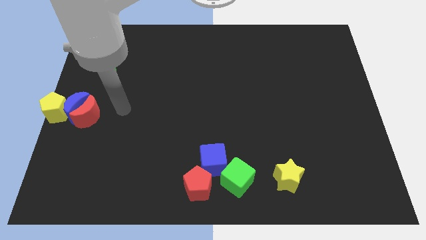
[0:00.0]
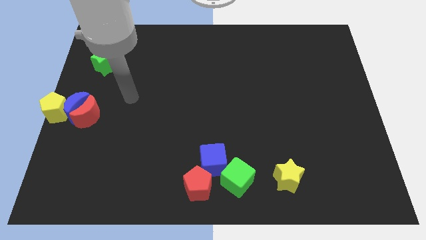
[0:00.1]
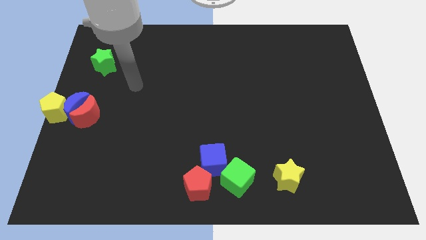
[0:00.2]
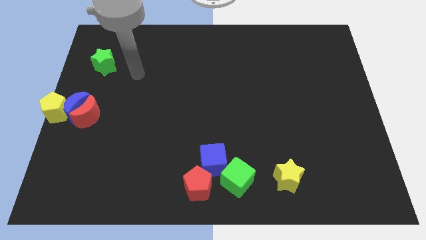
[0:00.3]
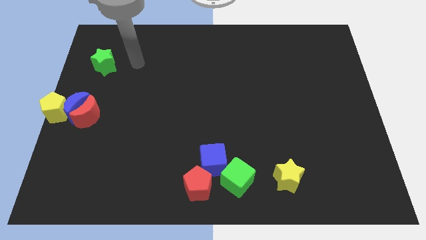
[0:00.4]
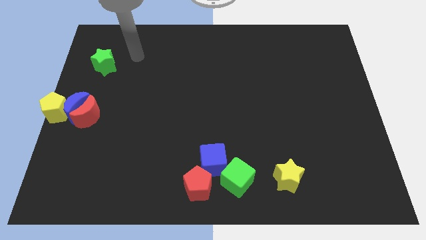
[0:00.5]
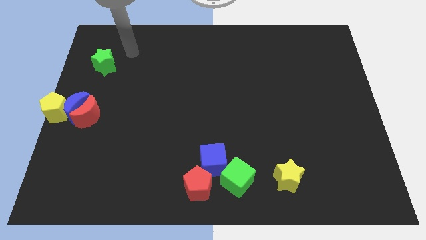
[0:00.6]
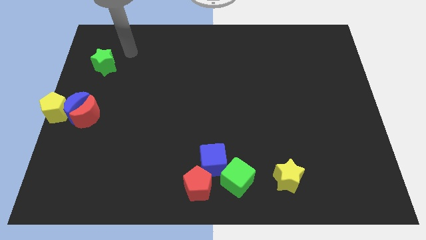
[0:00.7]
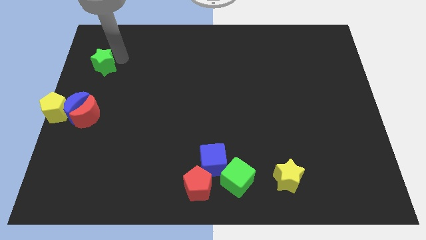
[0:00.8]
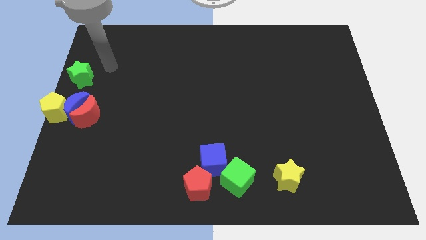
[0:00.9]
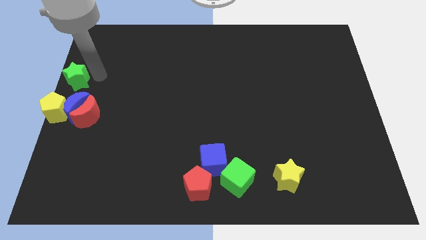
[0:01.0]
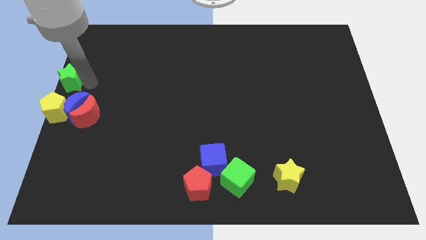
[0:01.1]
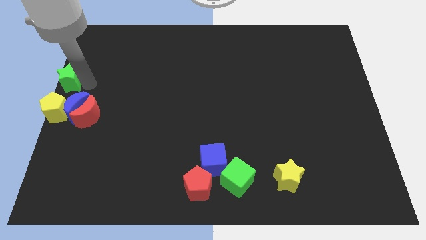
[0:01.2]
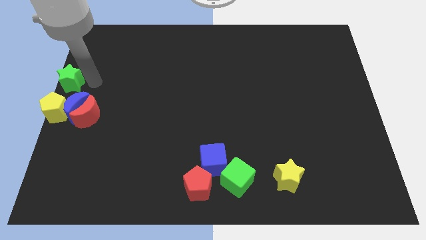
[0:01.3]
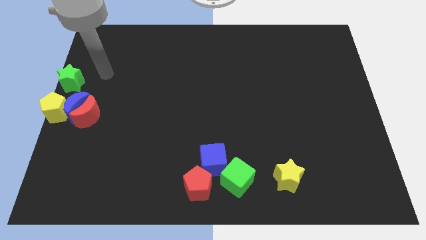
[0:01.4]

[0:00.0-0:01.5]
move the green star towards the left center of the board

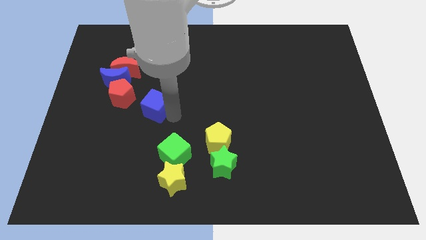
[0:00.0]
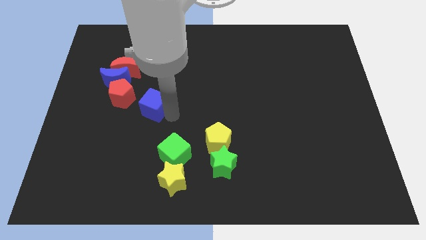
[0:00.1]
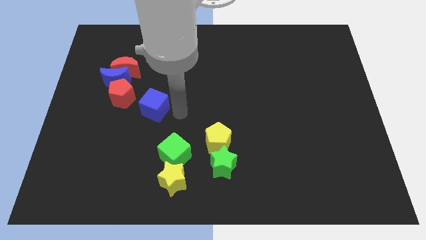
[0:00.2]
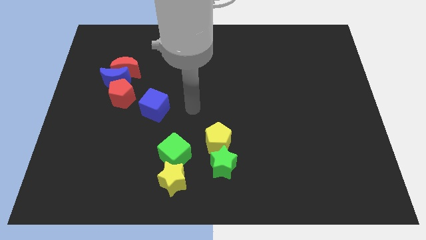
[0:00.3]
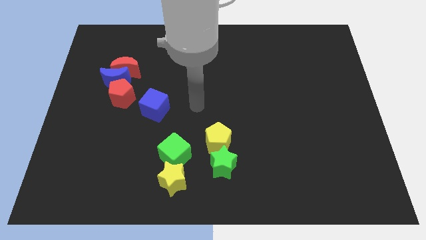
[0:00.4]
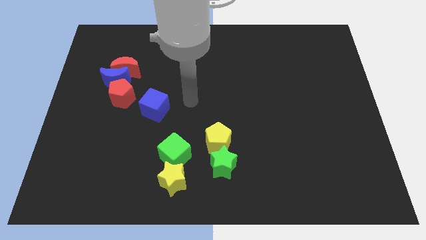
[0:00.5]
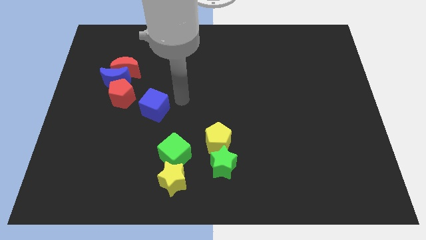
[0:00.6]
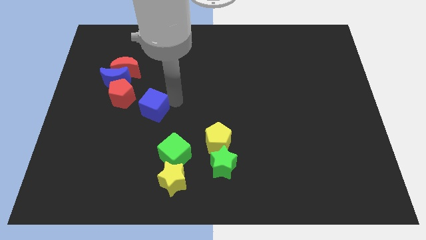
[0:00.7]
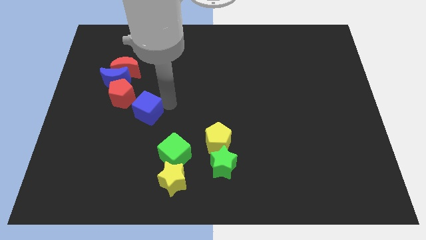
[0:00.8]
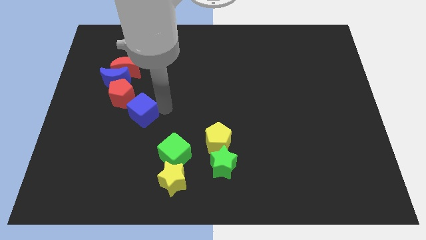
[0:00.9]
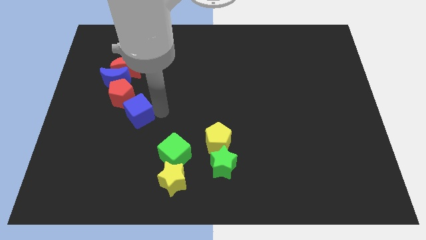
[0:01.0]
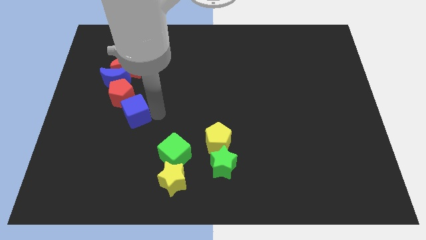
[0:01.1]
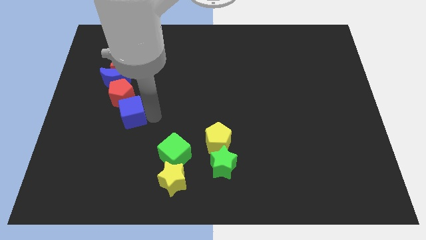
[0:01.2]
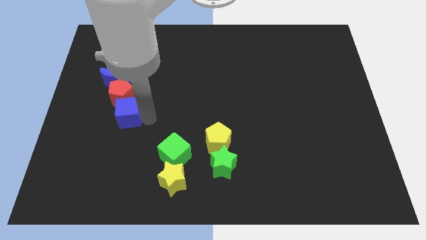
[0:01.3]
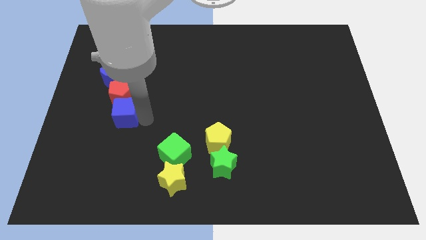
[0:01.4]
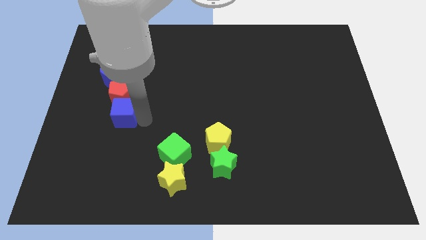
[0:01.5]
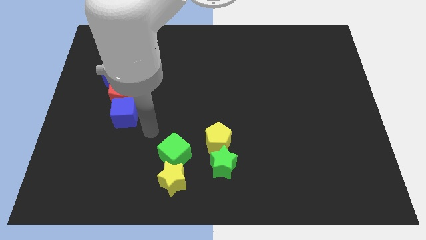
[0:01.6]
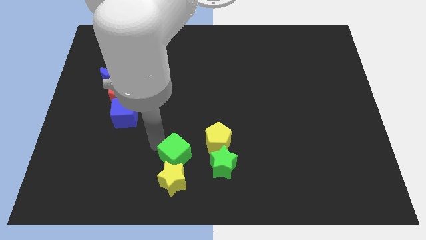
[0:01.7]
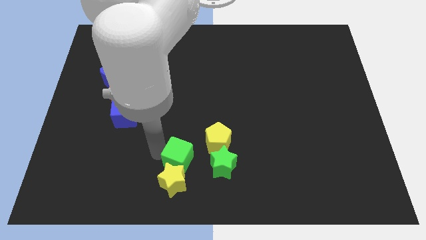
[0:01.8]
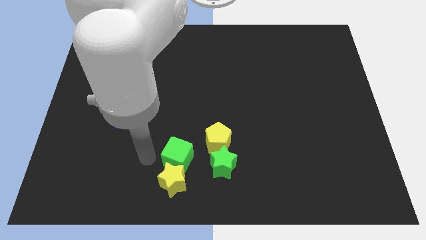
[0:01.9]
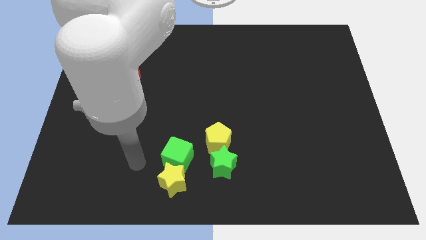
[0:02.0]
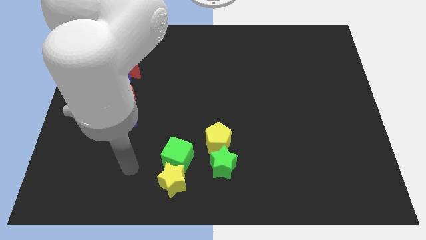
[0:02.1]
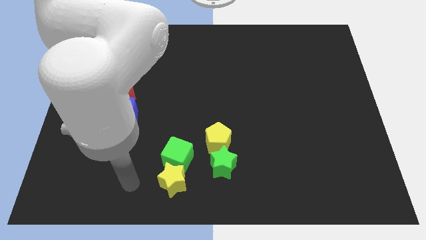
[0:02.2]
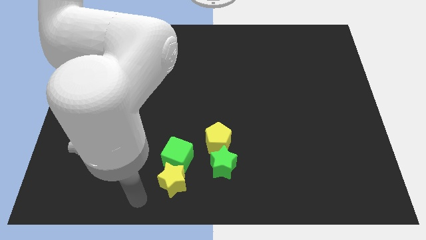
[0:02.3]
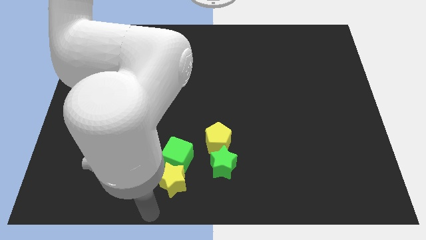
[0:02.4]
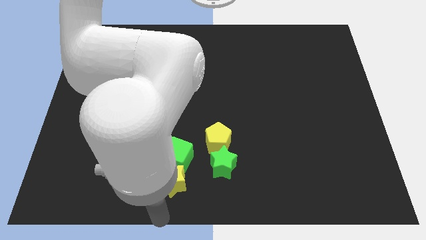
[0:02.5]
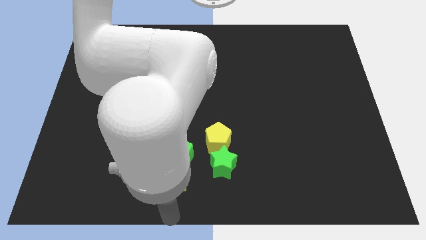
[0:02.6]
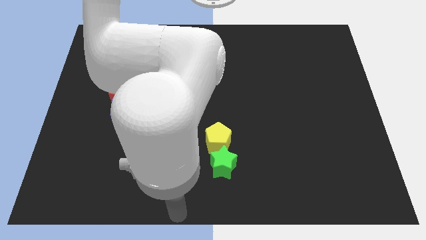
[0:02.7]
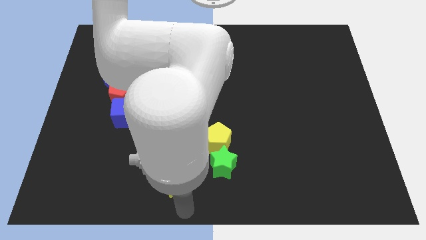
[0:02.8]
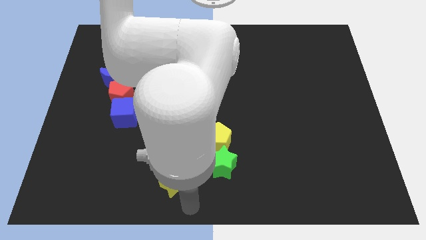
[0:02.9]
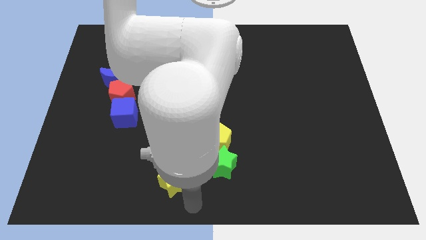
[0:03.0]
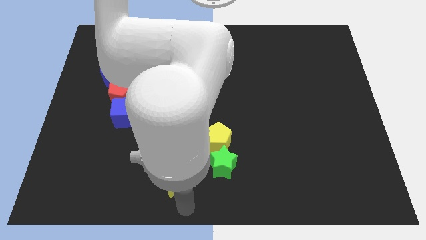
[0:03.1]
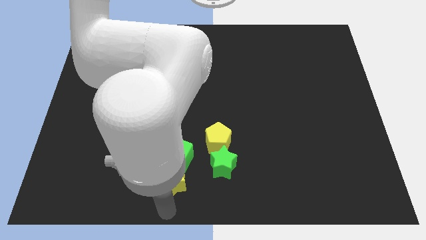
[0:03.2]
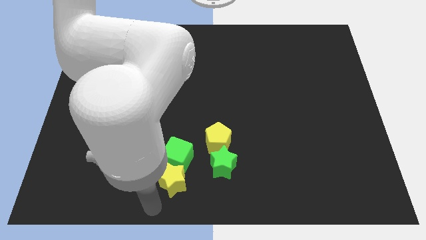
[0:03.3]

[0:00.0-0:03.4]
place the blue cube at the bottom of the red pentagon

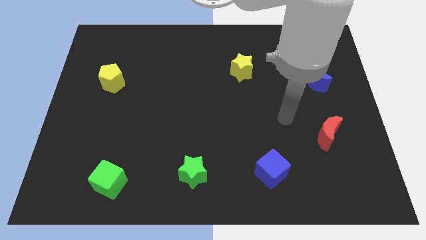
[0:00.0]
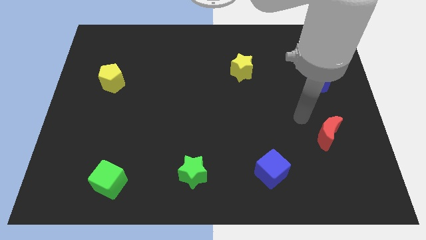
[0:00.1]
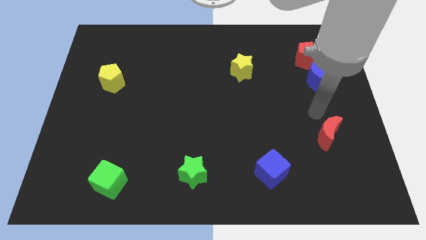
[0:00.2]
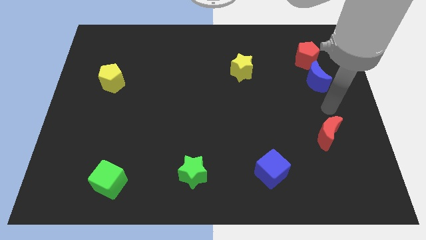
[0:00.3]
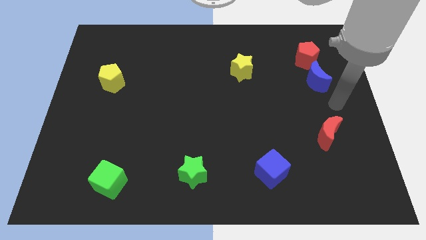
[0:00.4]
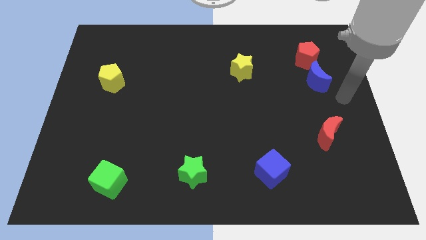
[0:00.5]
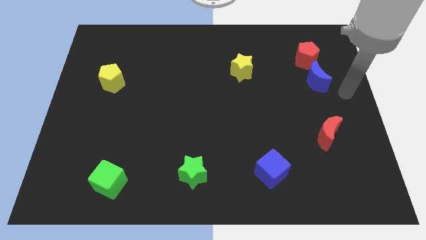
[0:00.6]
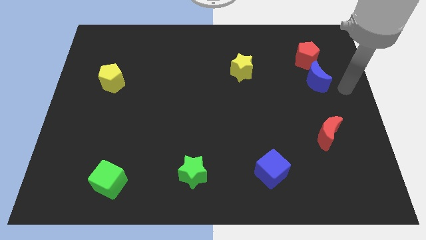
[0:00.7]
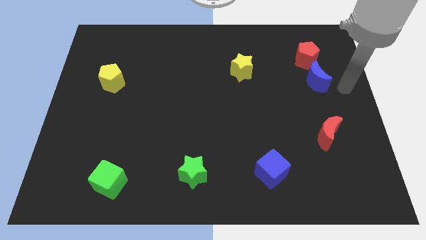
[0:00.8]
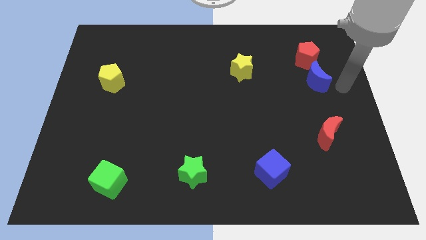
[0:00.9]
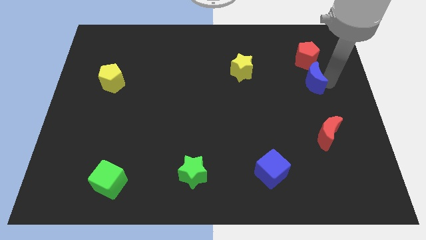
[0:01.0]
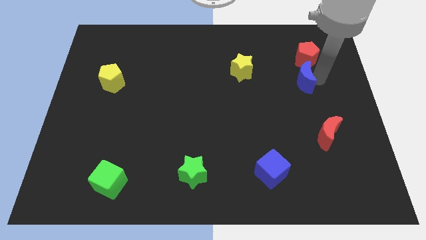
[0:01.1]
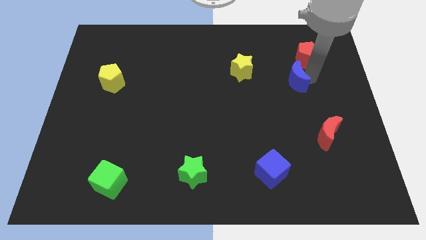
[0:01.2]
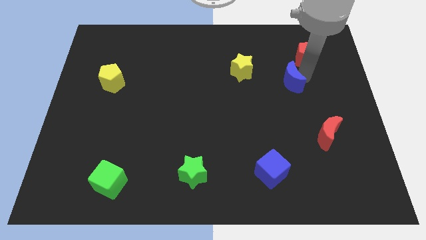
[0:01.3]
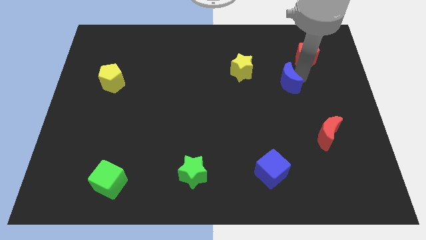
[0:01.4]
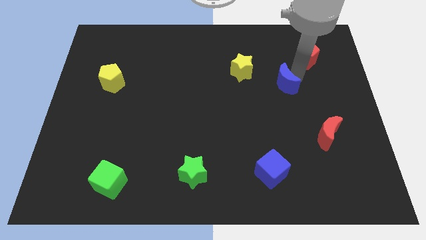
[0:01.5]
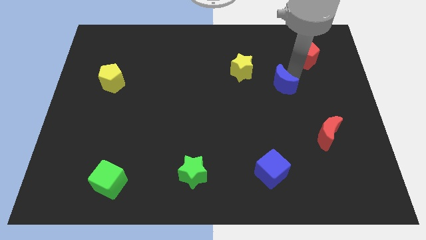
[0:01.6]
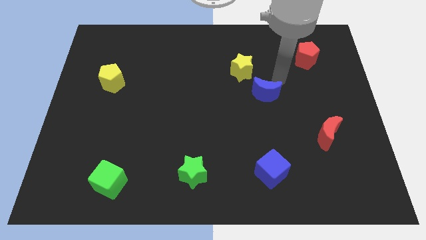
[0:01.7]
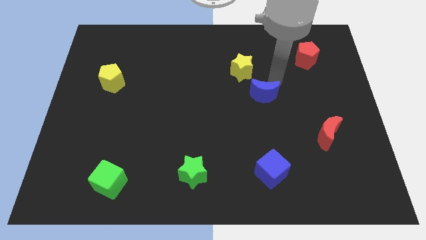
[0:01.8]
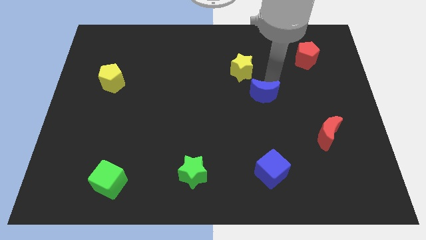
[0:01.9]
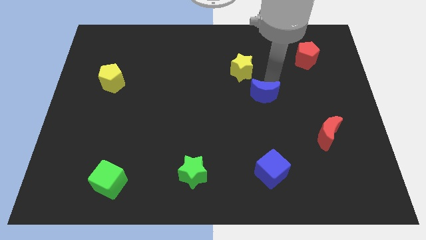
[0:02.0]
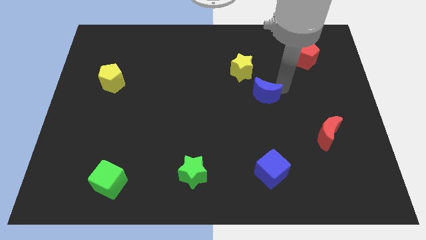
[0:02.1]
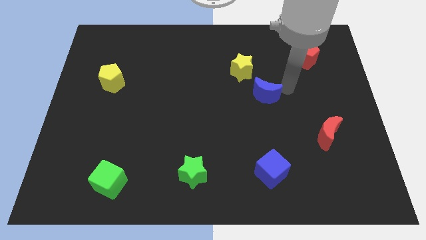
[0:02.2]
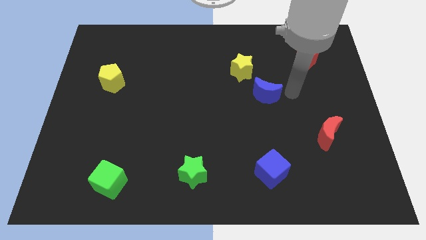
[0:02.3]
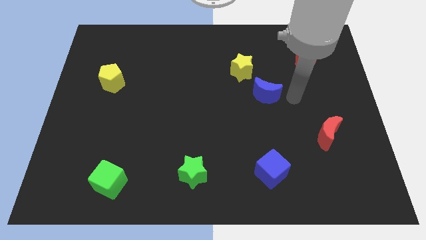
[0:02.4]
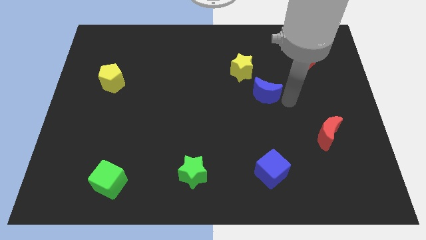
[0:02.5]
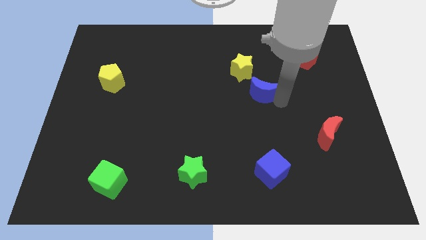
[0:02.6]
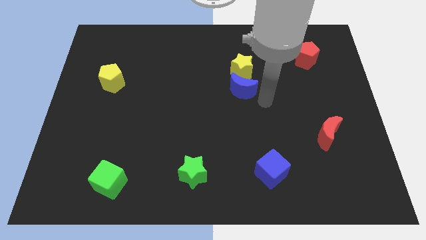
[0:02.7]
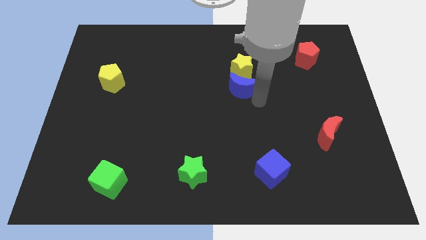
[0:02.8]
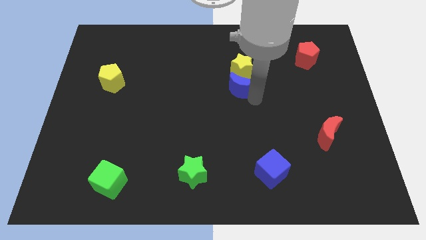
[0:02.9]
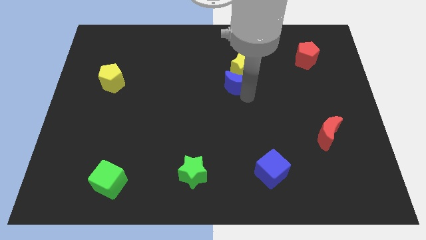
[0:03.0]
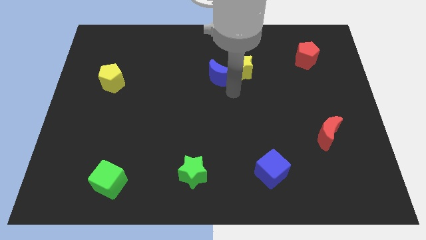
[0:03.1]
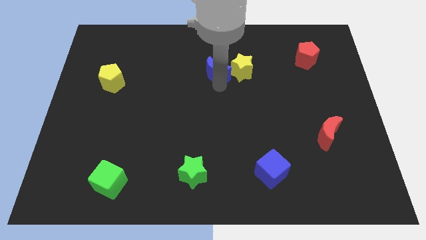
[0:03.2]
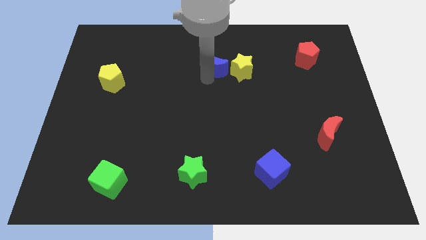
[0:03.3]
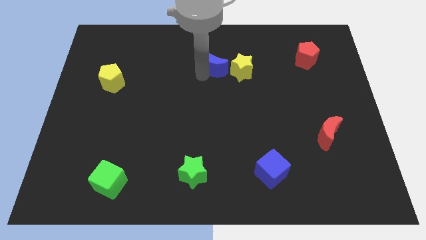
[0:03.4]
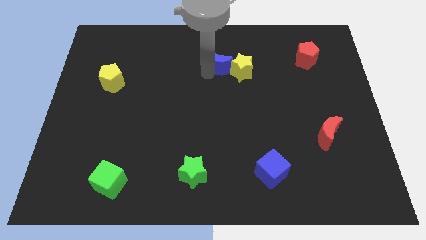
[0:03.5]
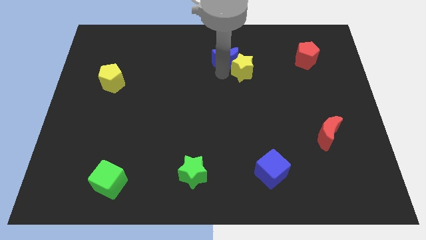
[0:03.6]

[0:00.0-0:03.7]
place blue moon to the left of yellow star

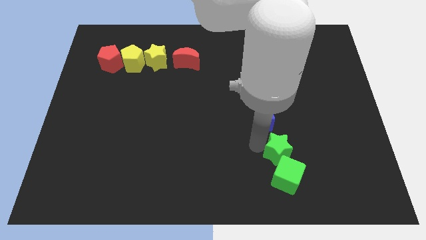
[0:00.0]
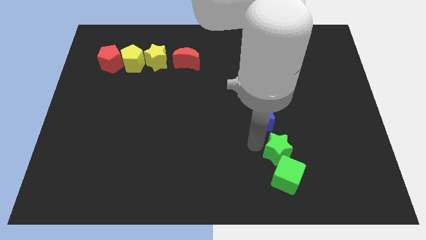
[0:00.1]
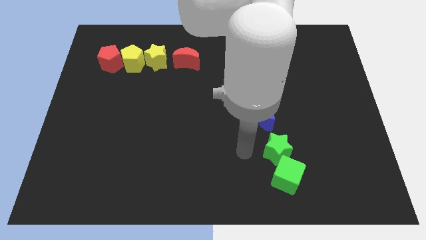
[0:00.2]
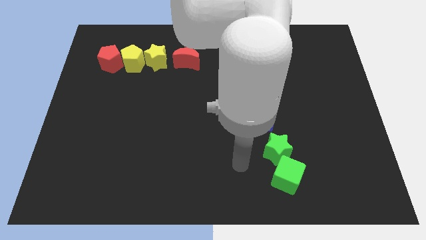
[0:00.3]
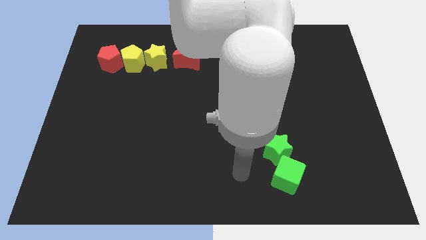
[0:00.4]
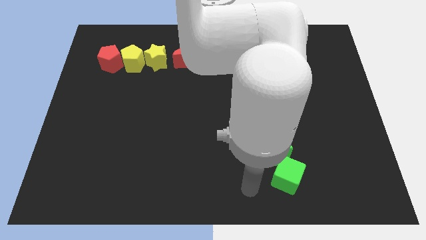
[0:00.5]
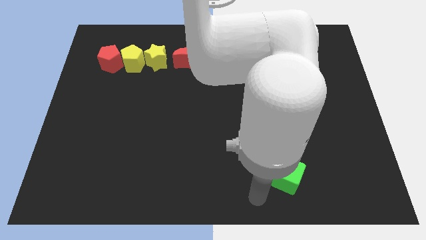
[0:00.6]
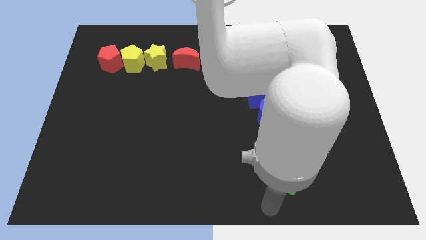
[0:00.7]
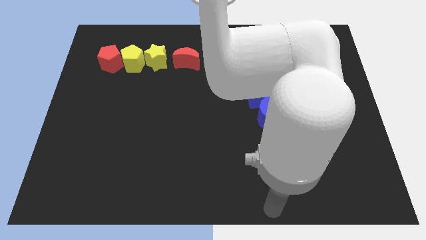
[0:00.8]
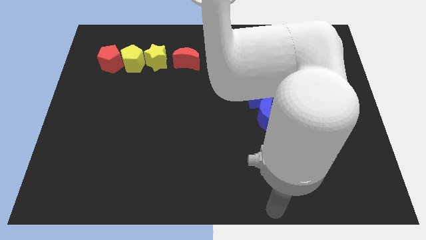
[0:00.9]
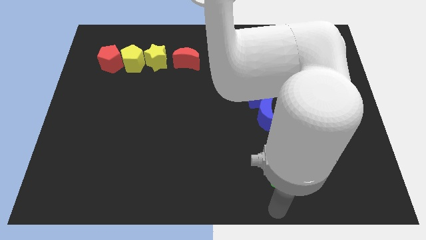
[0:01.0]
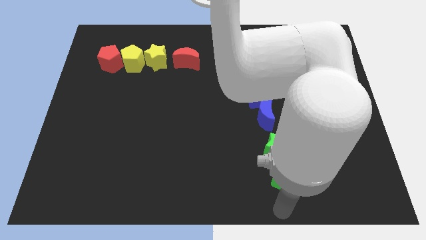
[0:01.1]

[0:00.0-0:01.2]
move the arm below the green cube
